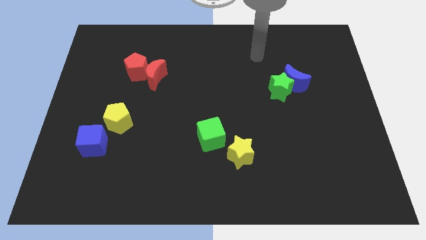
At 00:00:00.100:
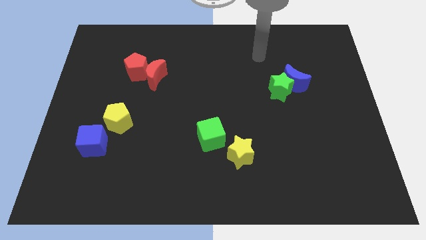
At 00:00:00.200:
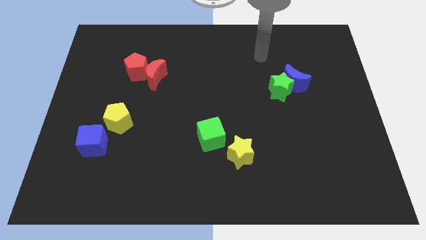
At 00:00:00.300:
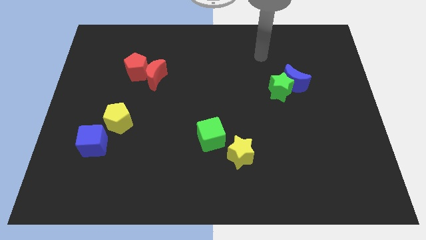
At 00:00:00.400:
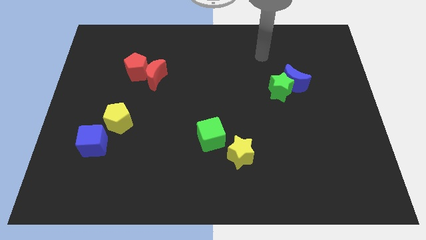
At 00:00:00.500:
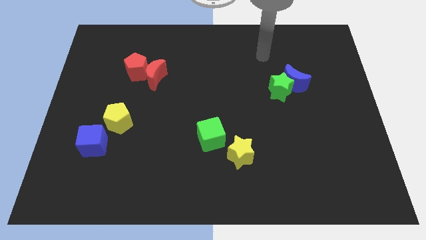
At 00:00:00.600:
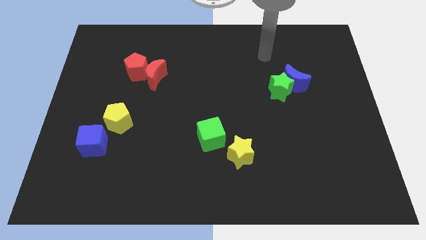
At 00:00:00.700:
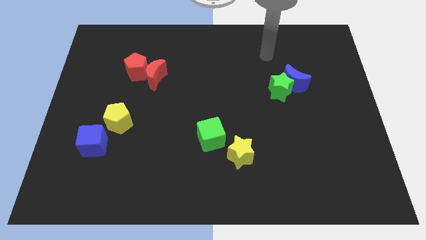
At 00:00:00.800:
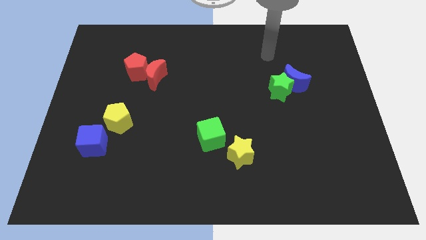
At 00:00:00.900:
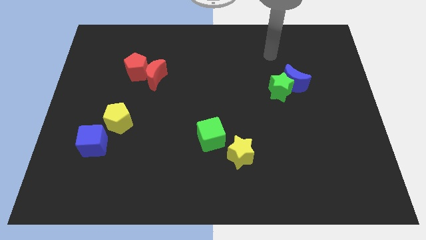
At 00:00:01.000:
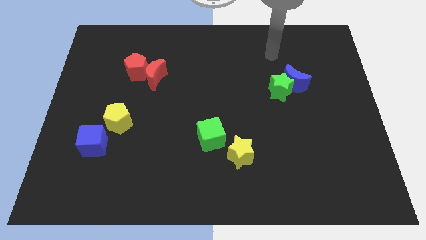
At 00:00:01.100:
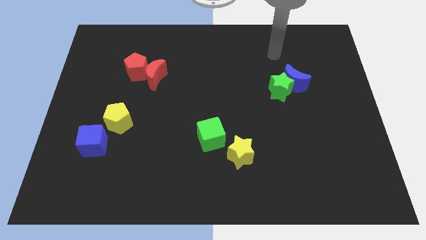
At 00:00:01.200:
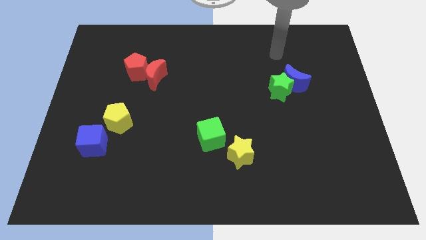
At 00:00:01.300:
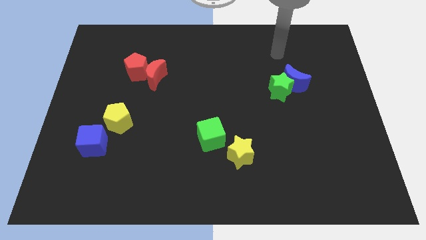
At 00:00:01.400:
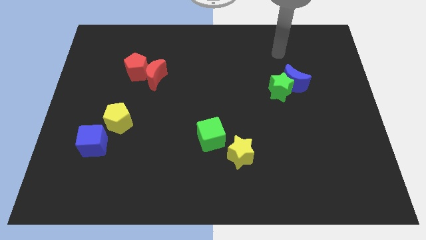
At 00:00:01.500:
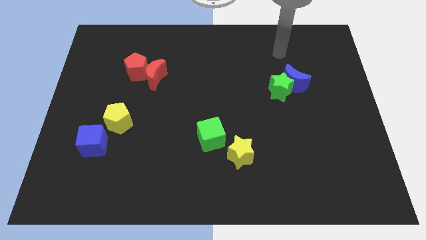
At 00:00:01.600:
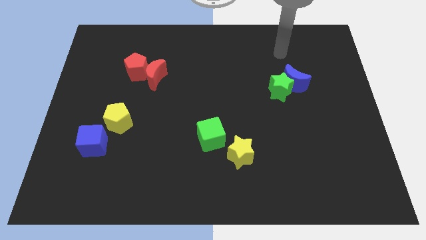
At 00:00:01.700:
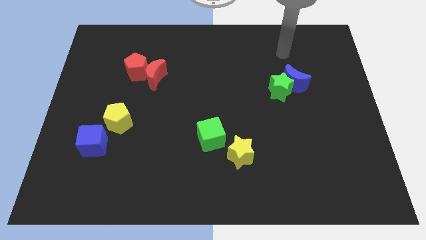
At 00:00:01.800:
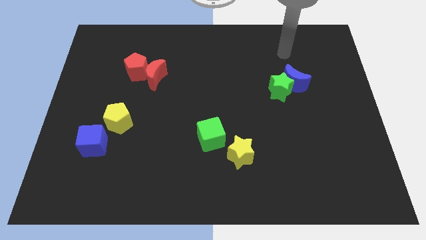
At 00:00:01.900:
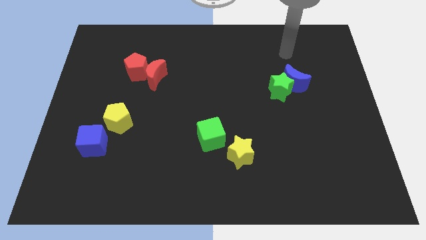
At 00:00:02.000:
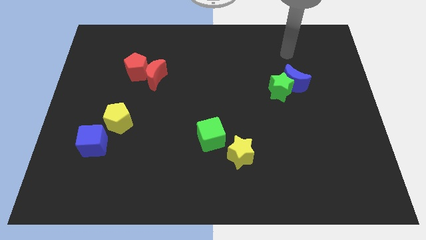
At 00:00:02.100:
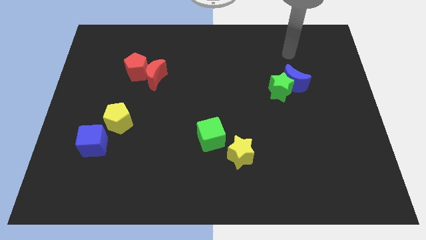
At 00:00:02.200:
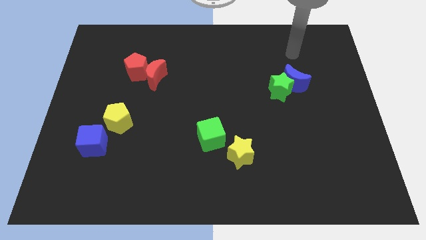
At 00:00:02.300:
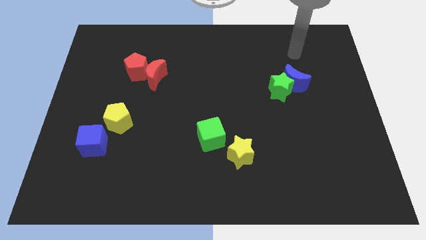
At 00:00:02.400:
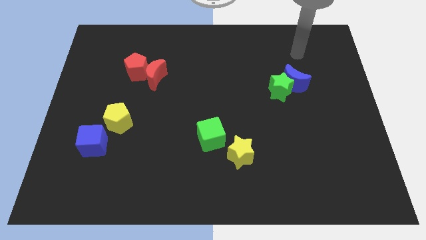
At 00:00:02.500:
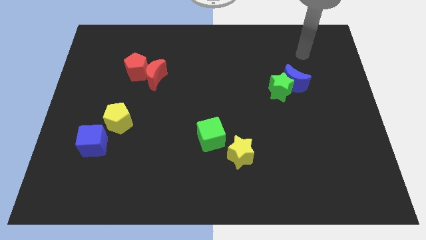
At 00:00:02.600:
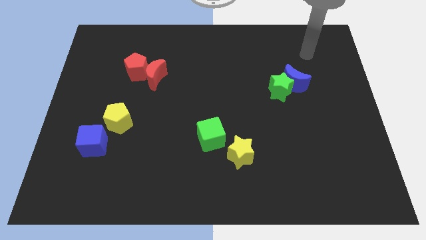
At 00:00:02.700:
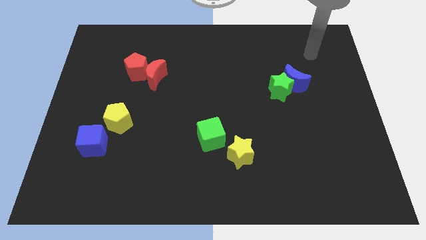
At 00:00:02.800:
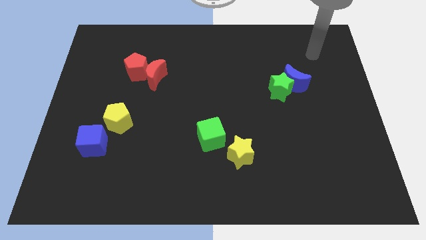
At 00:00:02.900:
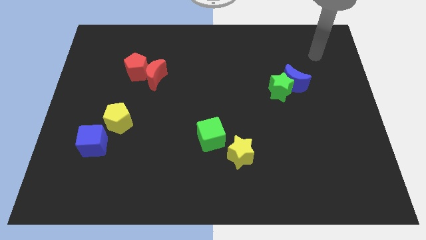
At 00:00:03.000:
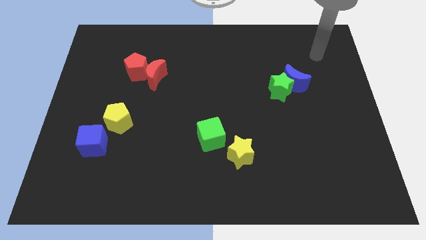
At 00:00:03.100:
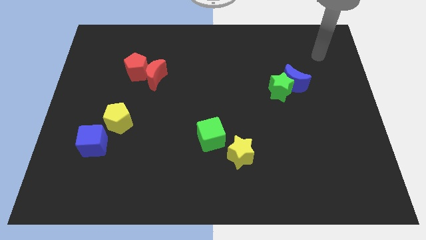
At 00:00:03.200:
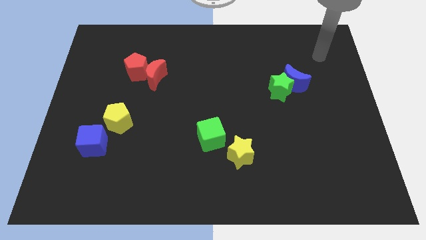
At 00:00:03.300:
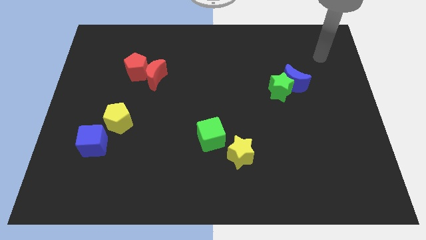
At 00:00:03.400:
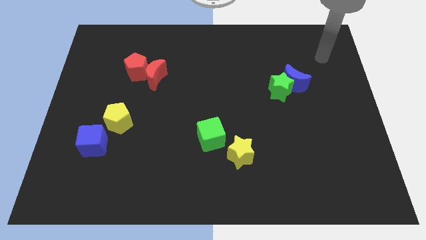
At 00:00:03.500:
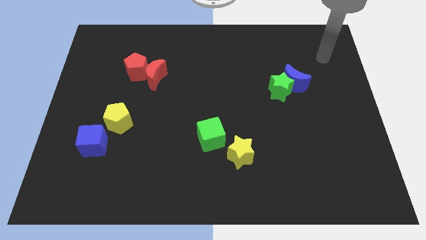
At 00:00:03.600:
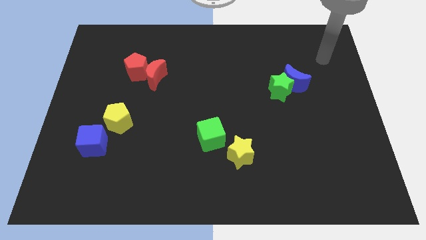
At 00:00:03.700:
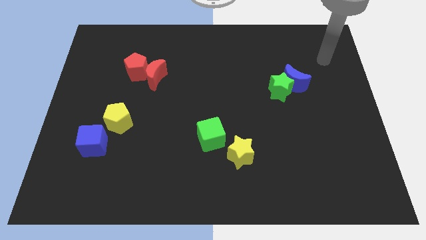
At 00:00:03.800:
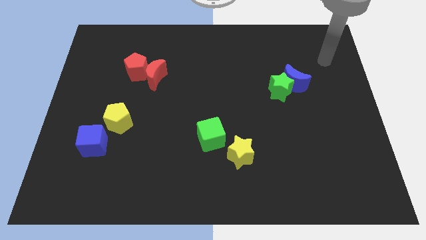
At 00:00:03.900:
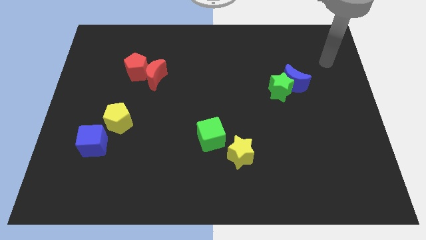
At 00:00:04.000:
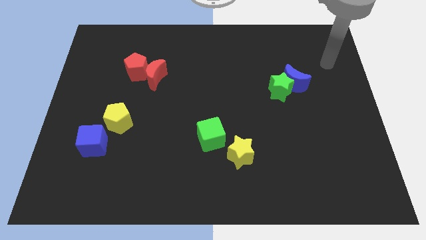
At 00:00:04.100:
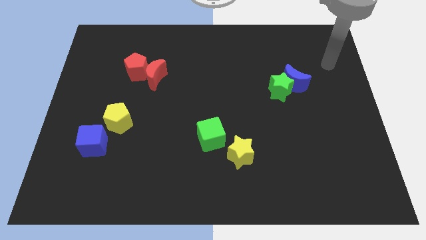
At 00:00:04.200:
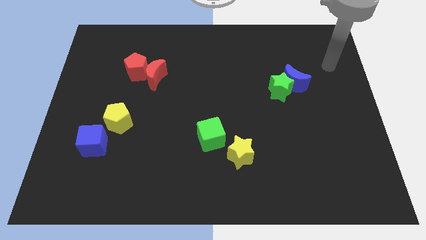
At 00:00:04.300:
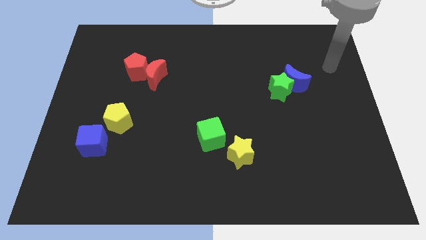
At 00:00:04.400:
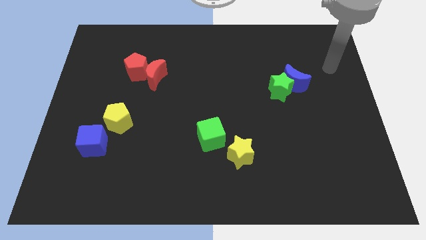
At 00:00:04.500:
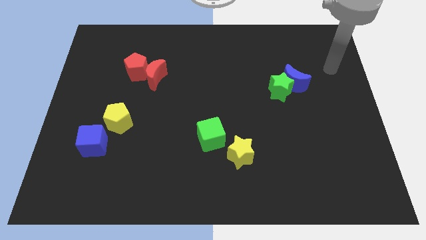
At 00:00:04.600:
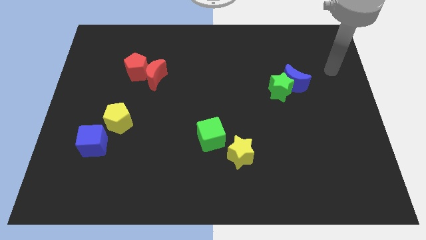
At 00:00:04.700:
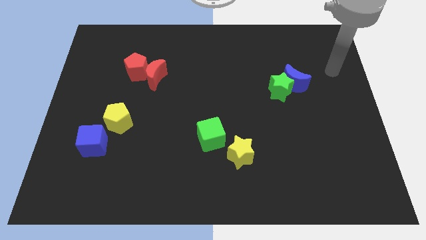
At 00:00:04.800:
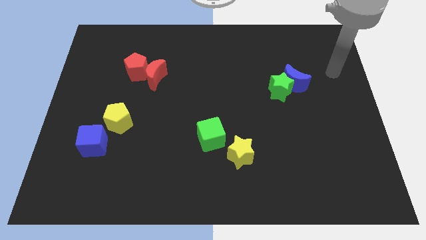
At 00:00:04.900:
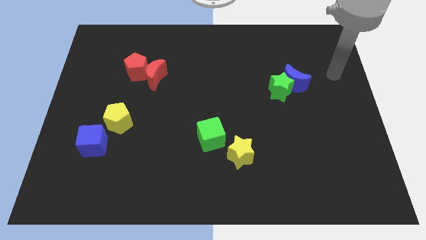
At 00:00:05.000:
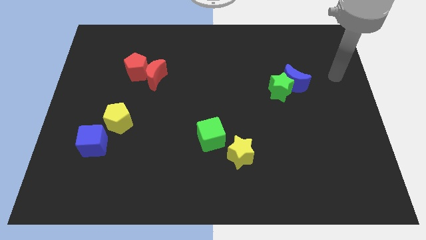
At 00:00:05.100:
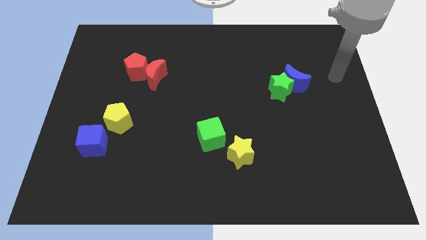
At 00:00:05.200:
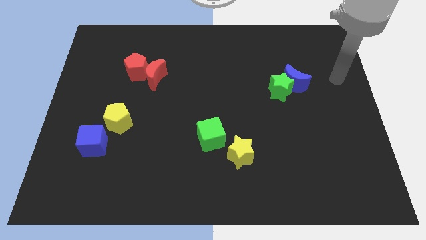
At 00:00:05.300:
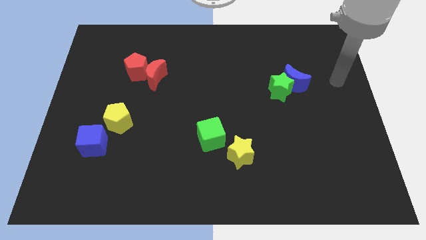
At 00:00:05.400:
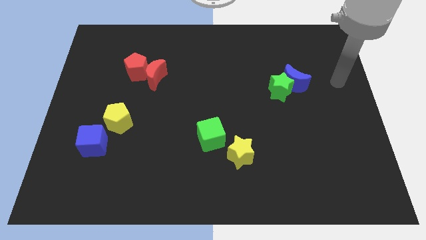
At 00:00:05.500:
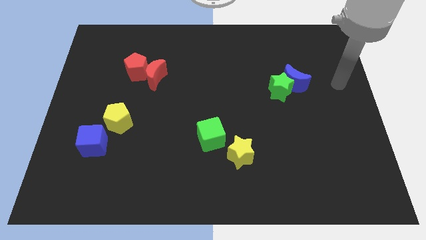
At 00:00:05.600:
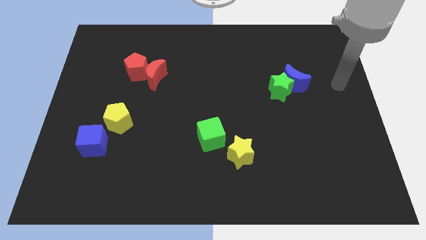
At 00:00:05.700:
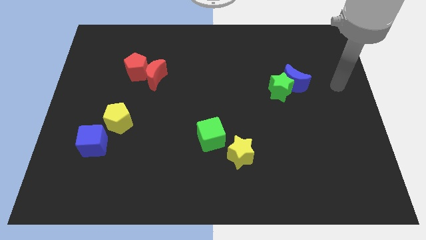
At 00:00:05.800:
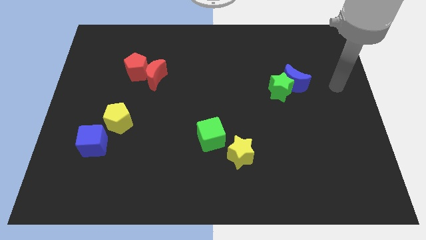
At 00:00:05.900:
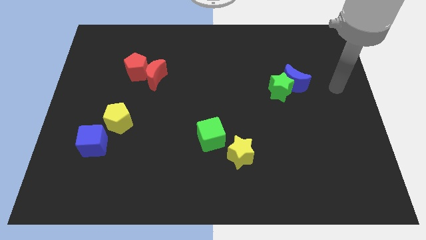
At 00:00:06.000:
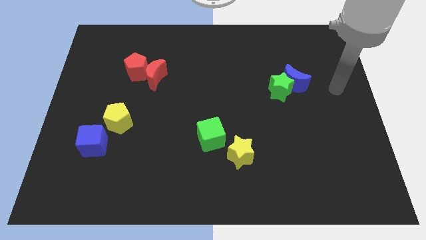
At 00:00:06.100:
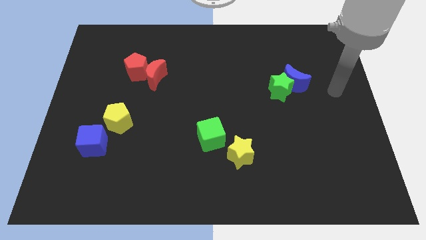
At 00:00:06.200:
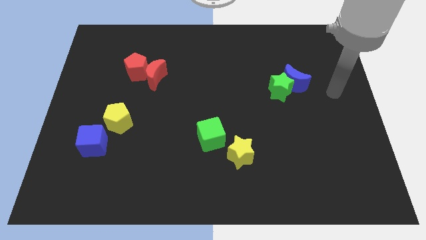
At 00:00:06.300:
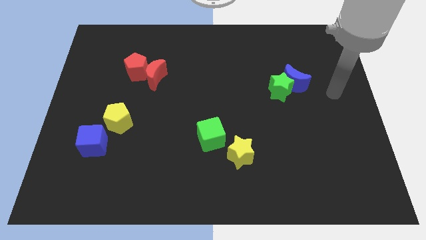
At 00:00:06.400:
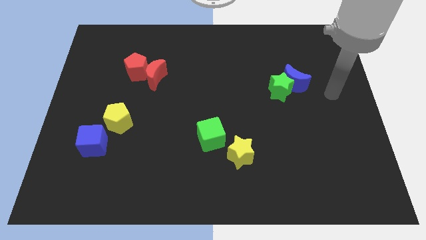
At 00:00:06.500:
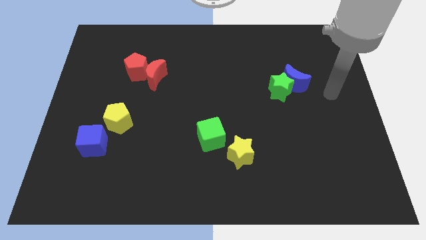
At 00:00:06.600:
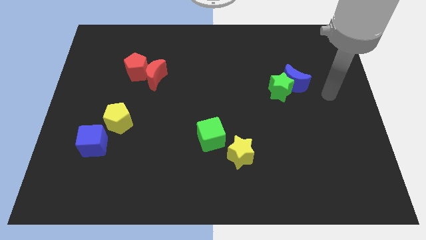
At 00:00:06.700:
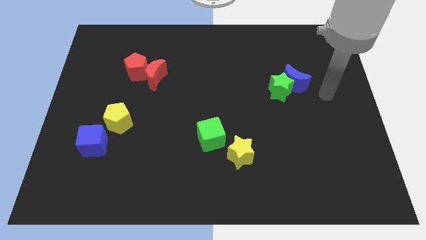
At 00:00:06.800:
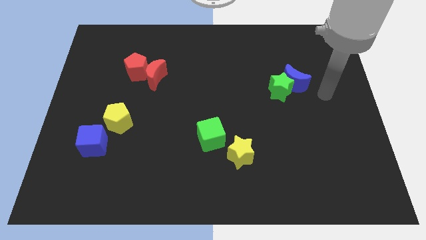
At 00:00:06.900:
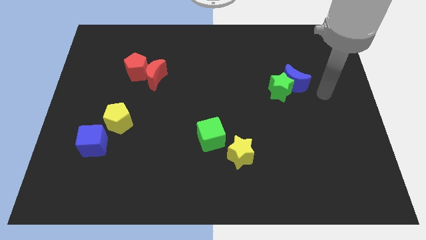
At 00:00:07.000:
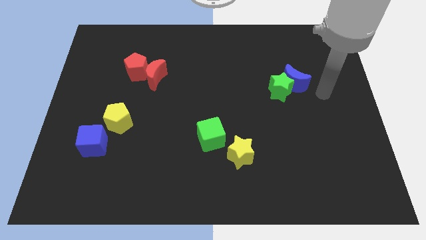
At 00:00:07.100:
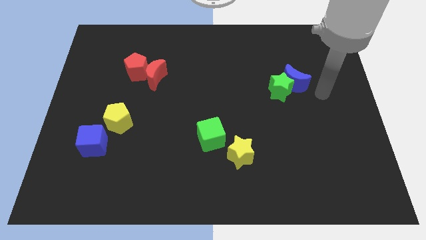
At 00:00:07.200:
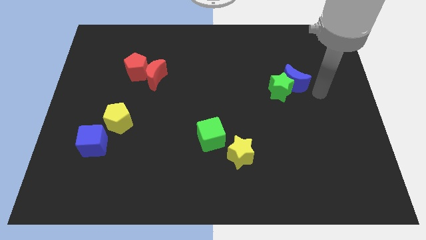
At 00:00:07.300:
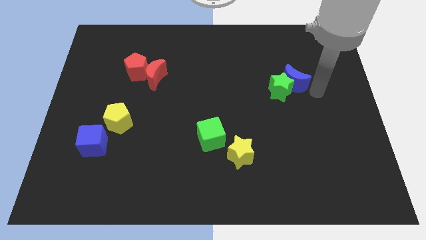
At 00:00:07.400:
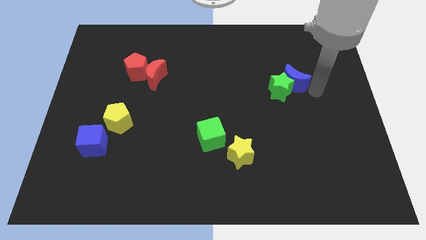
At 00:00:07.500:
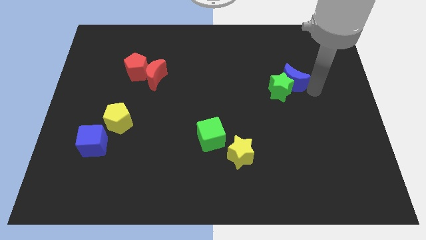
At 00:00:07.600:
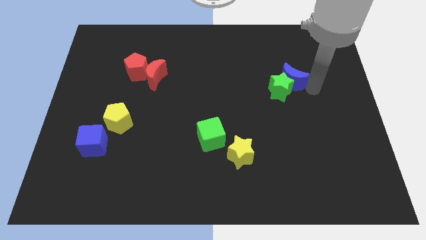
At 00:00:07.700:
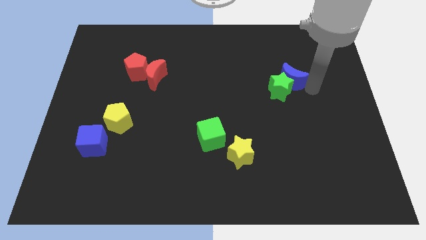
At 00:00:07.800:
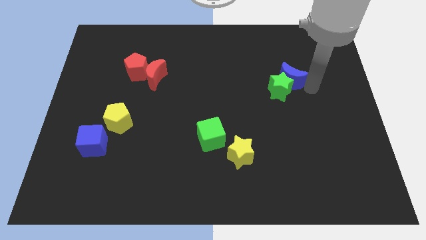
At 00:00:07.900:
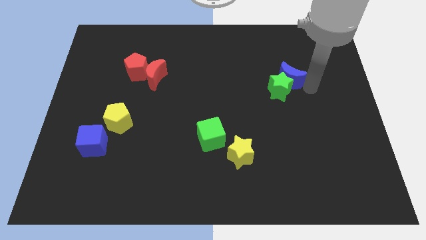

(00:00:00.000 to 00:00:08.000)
tap the blue crescent

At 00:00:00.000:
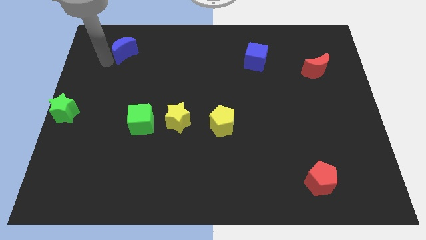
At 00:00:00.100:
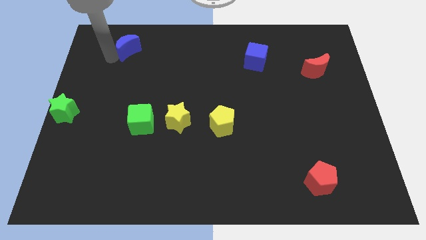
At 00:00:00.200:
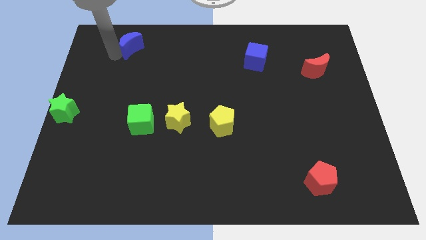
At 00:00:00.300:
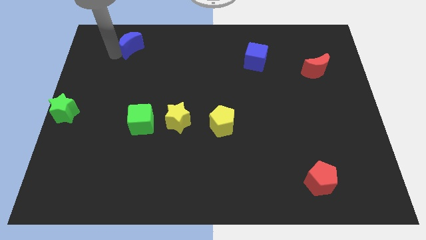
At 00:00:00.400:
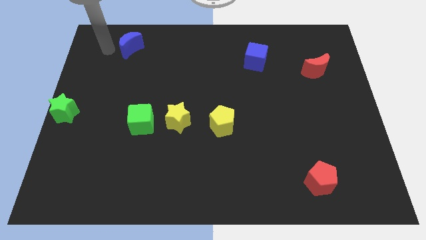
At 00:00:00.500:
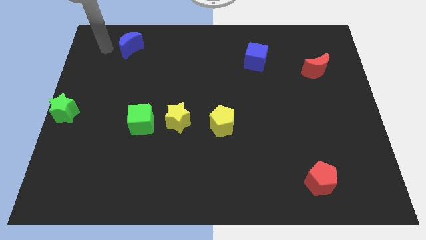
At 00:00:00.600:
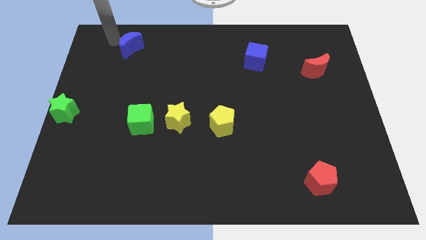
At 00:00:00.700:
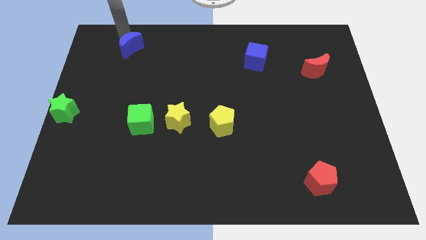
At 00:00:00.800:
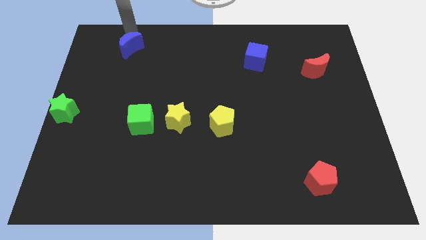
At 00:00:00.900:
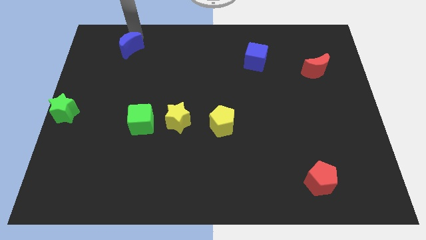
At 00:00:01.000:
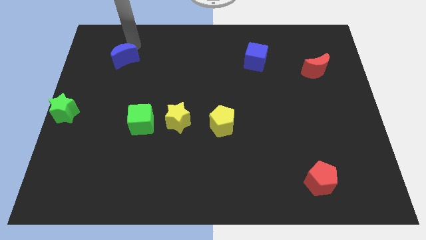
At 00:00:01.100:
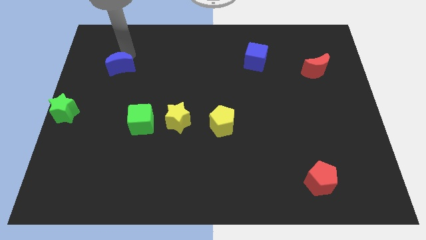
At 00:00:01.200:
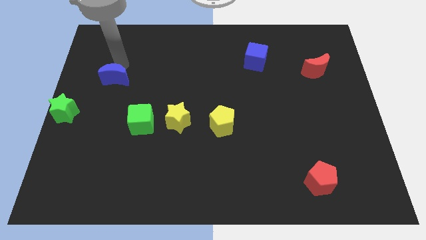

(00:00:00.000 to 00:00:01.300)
move the blue moon slight down to the green star
